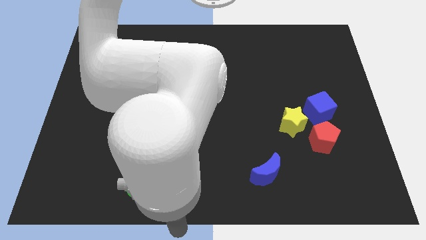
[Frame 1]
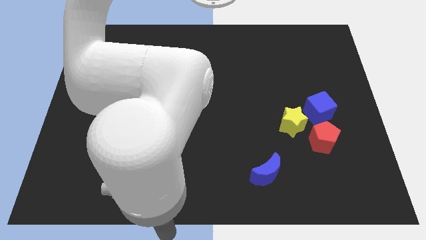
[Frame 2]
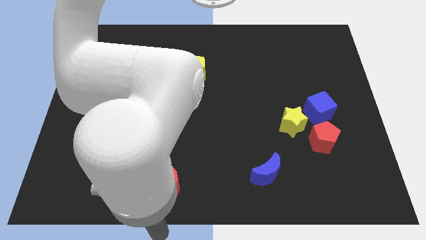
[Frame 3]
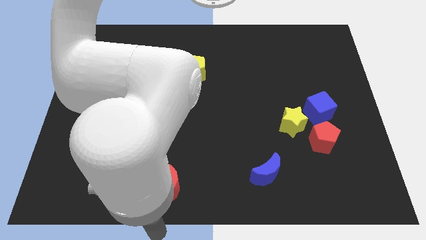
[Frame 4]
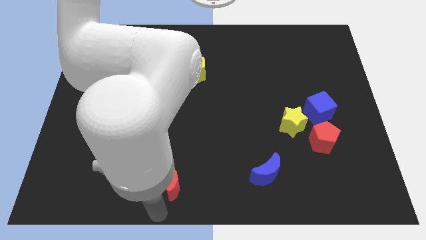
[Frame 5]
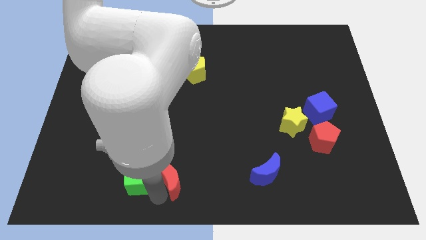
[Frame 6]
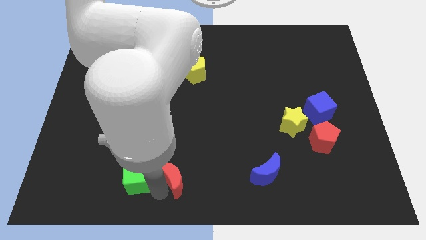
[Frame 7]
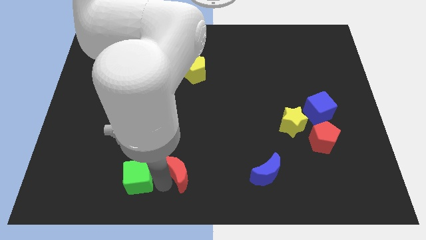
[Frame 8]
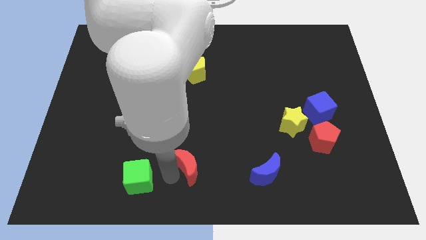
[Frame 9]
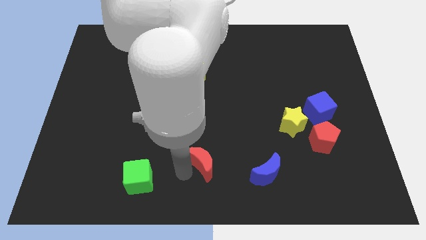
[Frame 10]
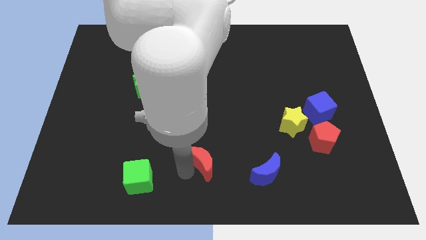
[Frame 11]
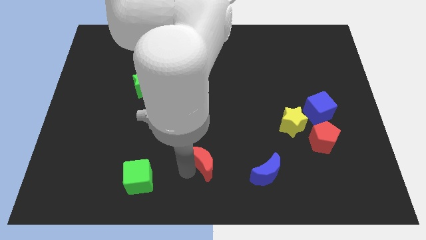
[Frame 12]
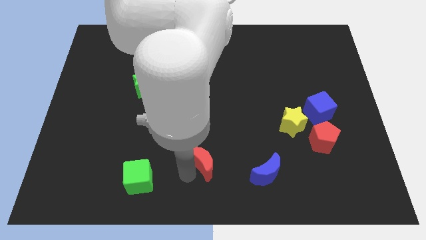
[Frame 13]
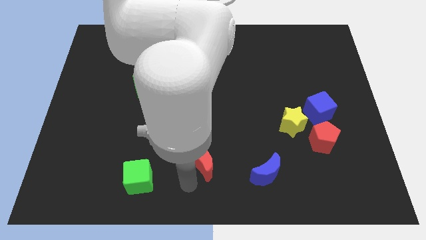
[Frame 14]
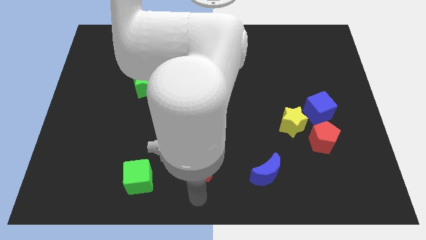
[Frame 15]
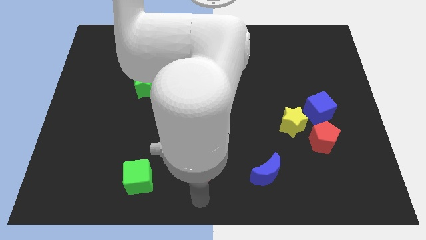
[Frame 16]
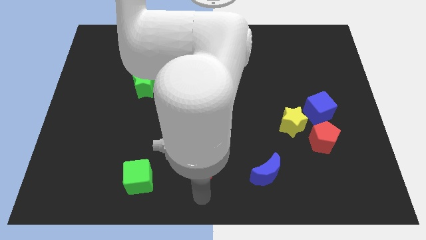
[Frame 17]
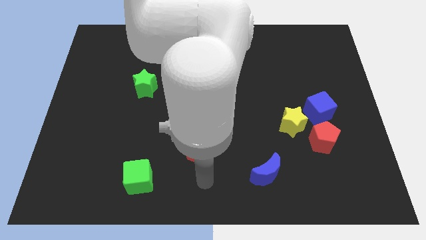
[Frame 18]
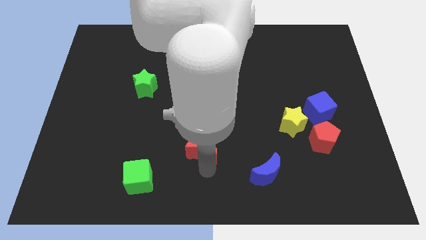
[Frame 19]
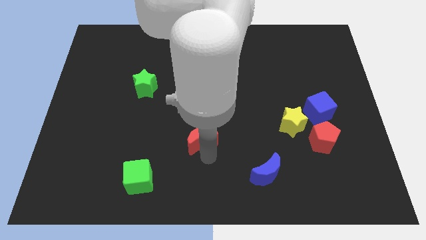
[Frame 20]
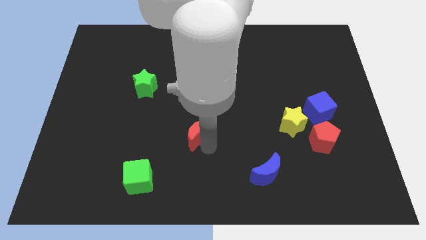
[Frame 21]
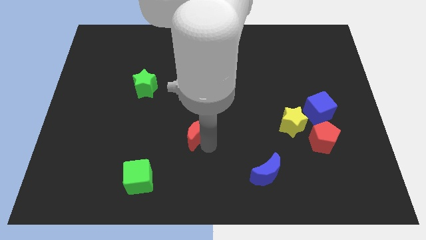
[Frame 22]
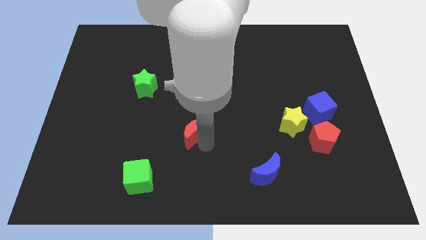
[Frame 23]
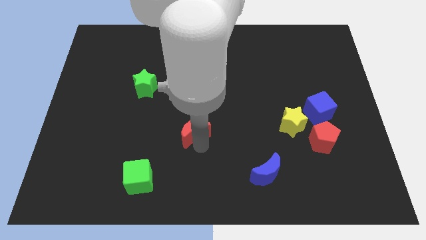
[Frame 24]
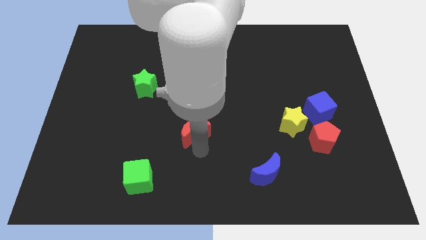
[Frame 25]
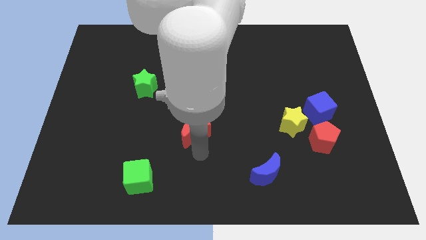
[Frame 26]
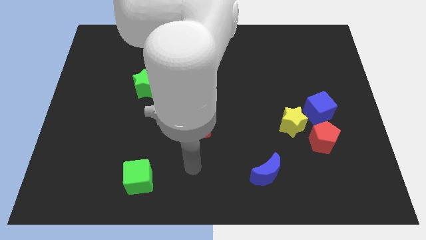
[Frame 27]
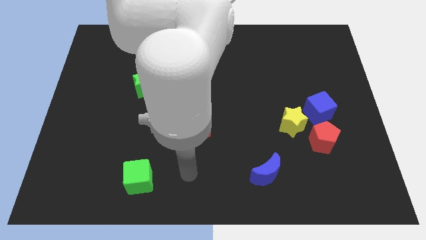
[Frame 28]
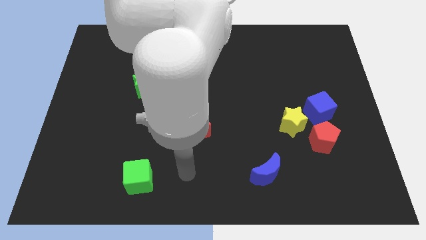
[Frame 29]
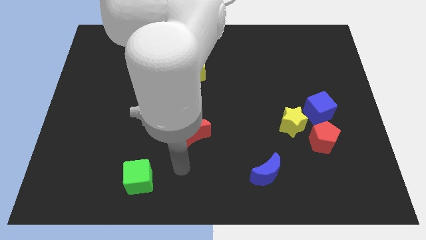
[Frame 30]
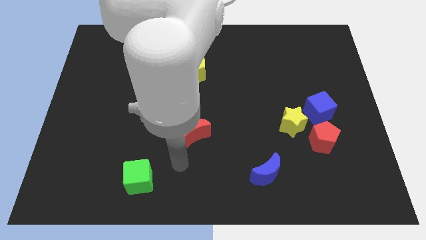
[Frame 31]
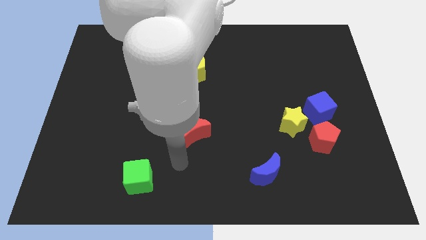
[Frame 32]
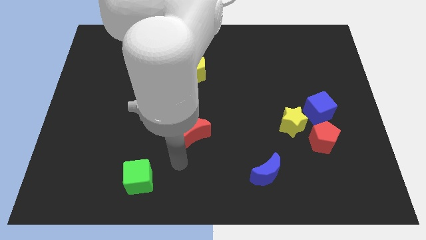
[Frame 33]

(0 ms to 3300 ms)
place red moon to the bottom of the yellow pentagon

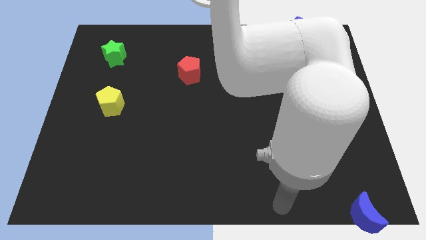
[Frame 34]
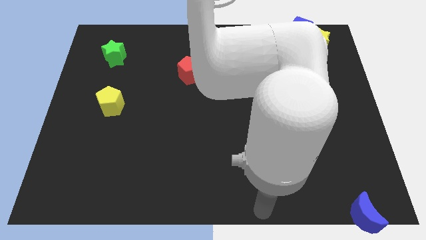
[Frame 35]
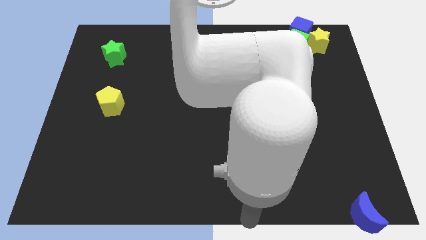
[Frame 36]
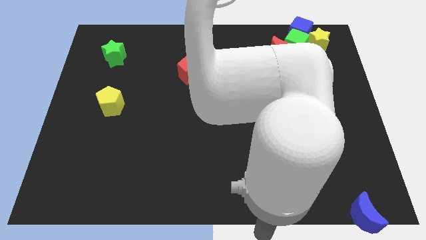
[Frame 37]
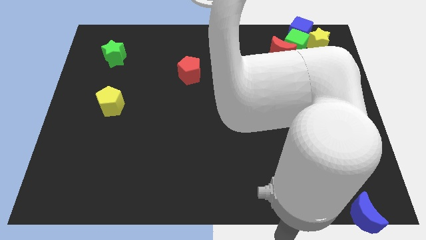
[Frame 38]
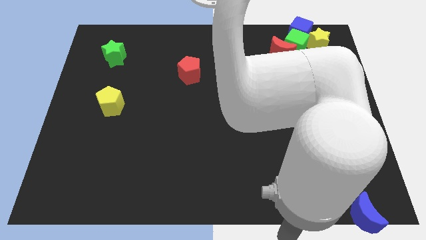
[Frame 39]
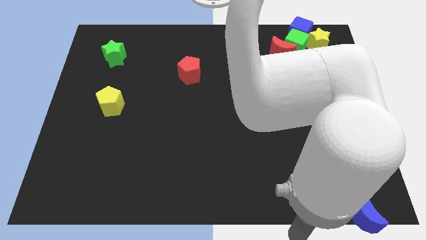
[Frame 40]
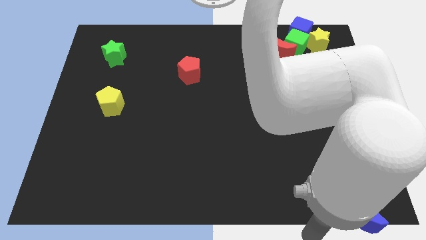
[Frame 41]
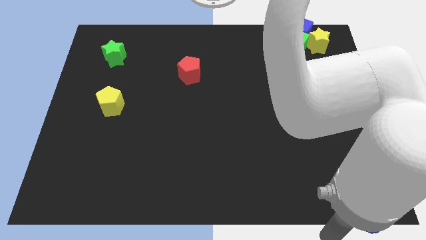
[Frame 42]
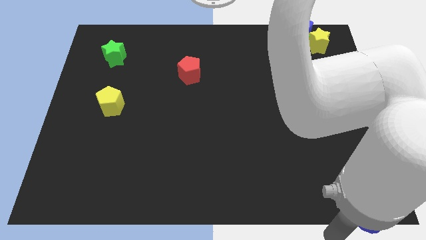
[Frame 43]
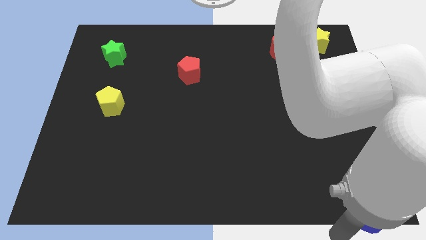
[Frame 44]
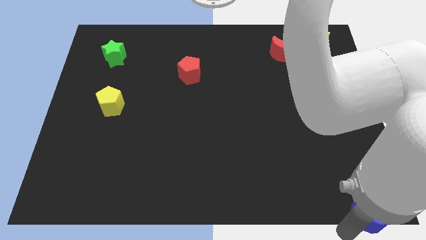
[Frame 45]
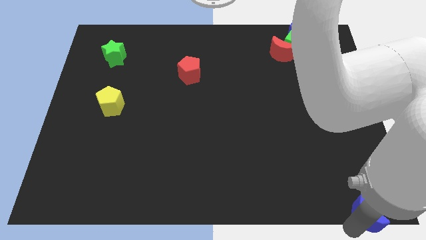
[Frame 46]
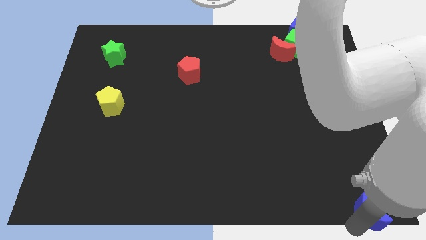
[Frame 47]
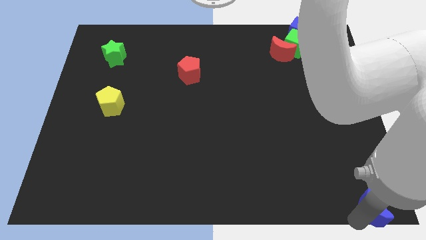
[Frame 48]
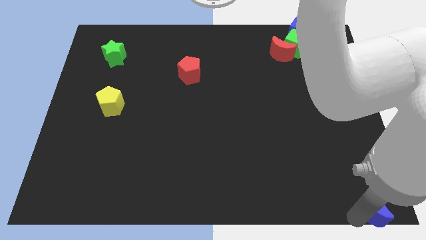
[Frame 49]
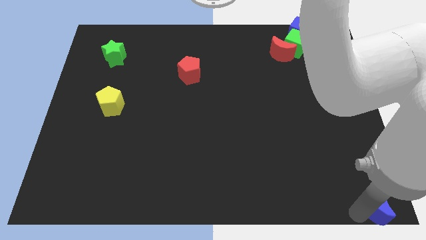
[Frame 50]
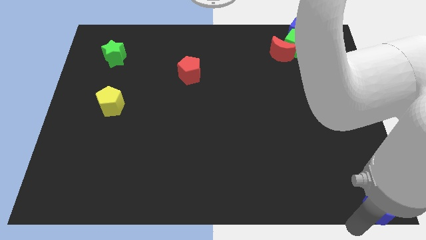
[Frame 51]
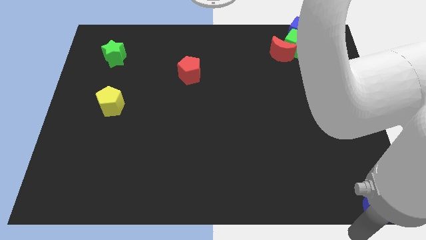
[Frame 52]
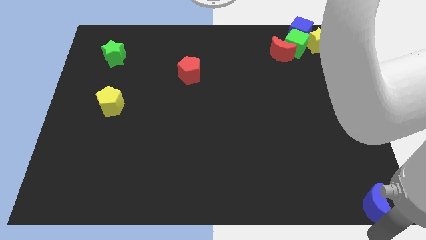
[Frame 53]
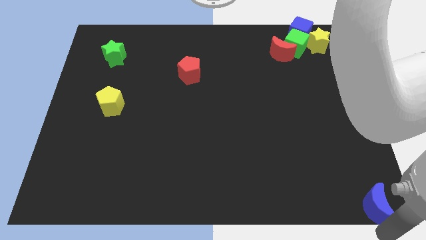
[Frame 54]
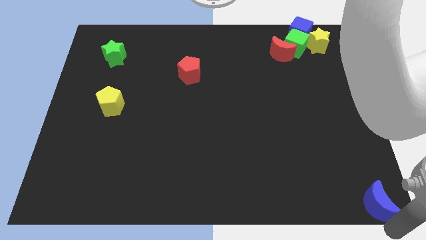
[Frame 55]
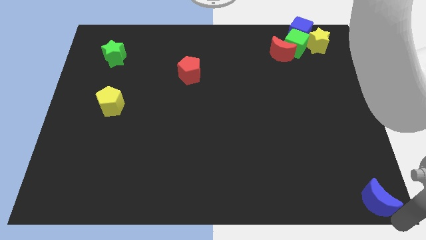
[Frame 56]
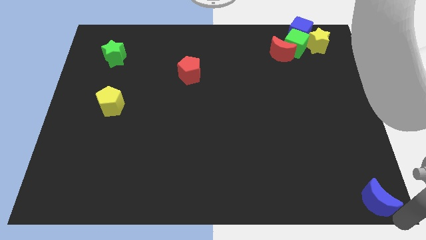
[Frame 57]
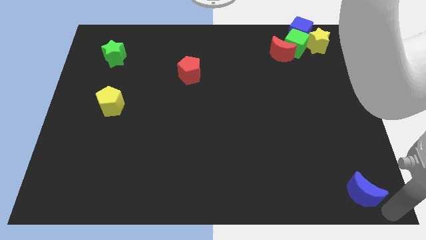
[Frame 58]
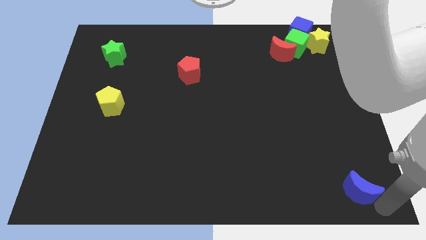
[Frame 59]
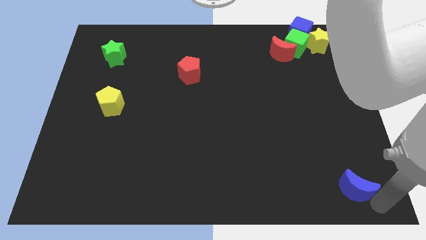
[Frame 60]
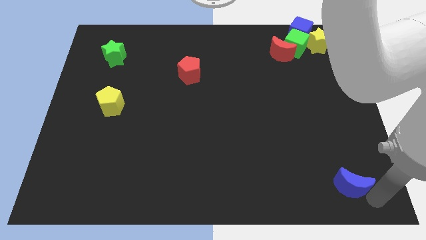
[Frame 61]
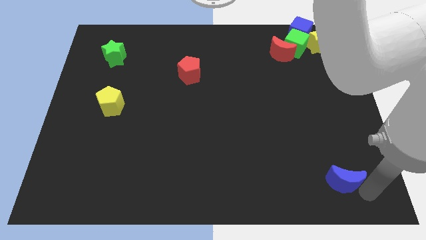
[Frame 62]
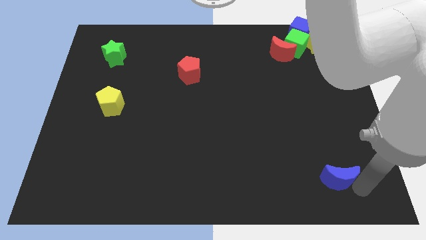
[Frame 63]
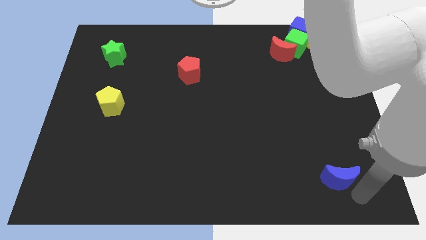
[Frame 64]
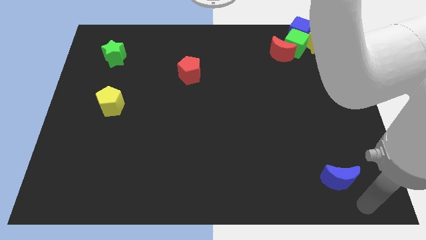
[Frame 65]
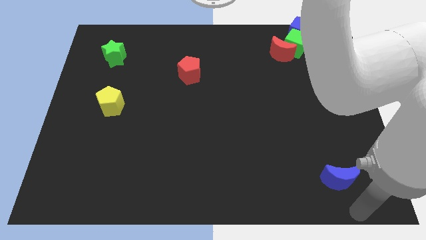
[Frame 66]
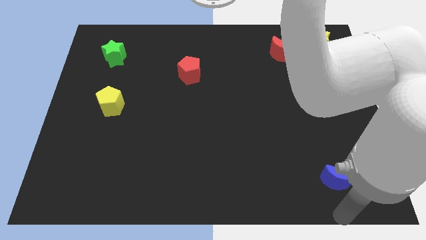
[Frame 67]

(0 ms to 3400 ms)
move blue moon towards up

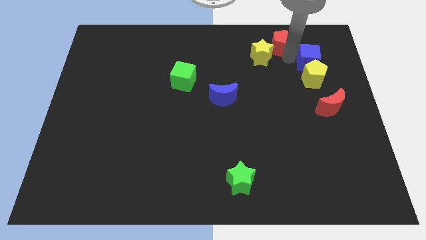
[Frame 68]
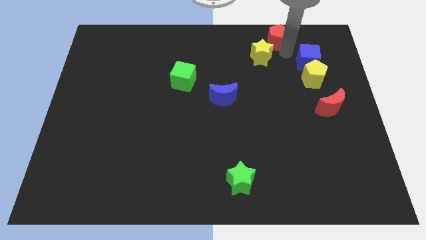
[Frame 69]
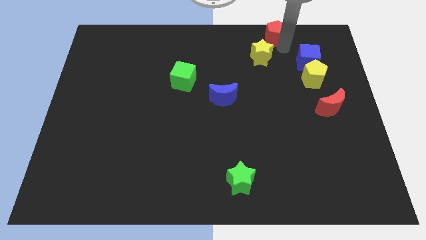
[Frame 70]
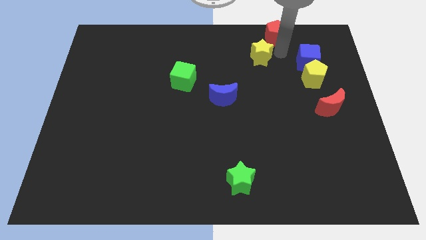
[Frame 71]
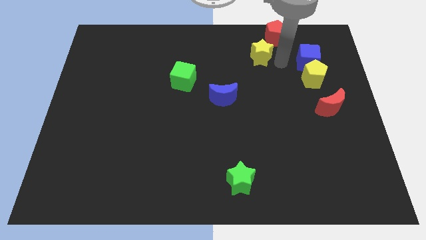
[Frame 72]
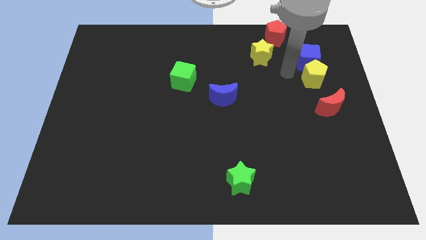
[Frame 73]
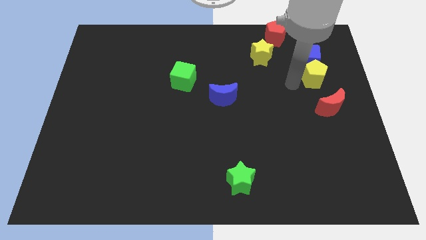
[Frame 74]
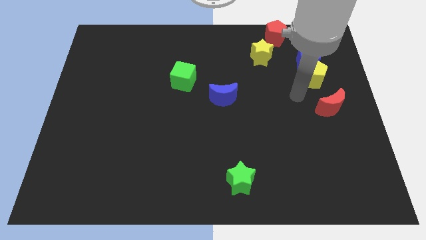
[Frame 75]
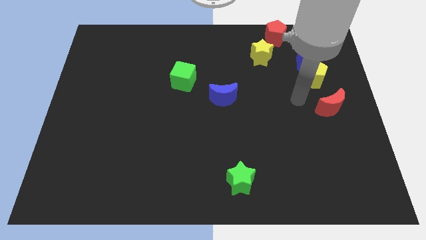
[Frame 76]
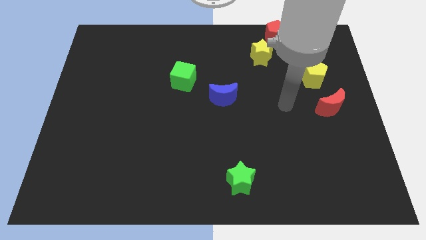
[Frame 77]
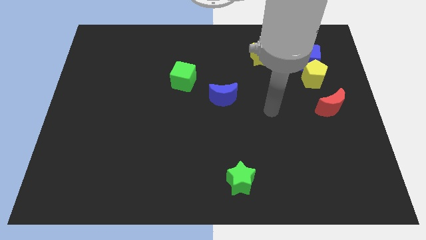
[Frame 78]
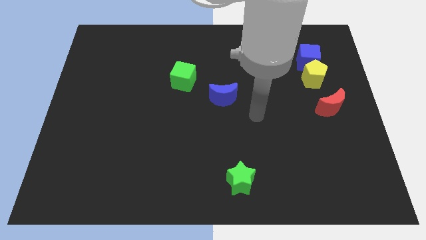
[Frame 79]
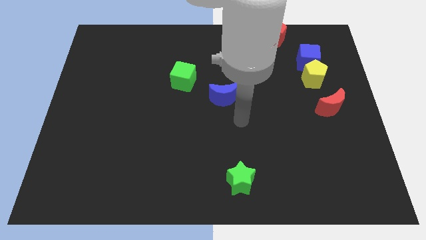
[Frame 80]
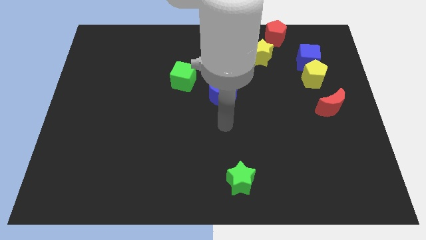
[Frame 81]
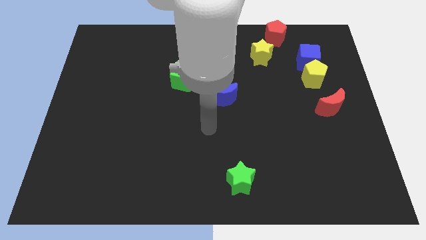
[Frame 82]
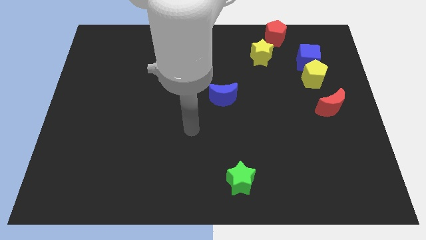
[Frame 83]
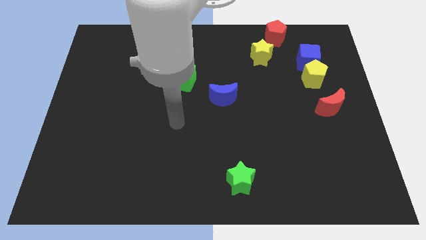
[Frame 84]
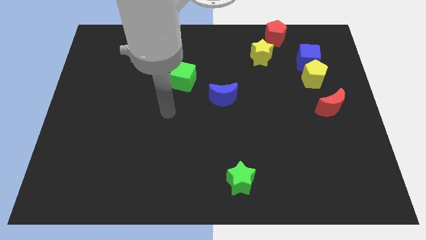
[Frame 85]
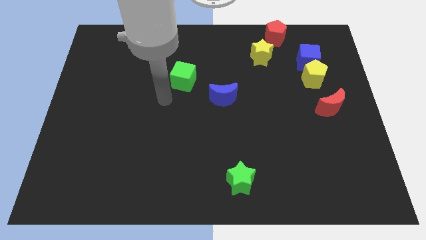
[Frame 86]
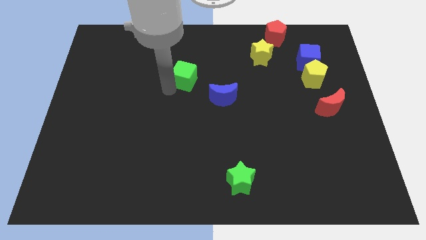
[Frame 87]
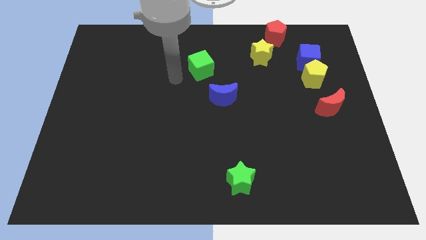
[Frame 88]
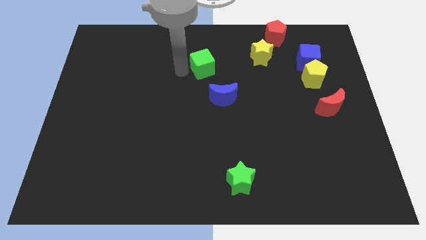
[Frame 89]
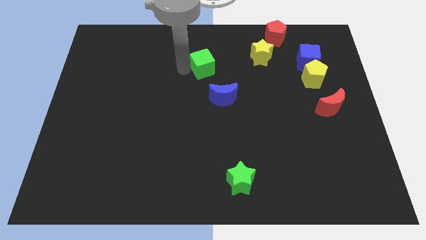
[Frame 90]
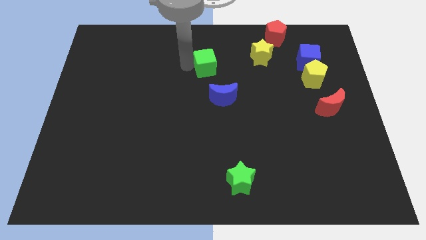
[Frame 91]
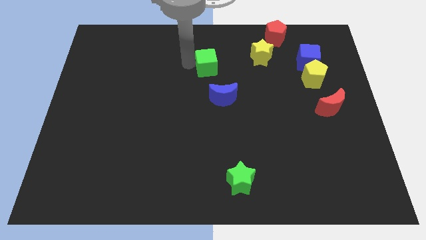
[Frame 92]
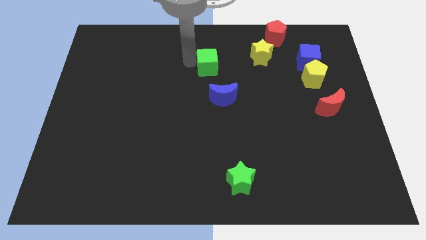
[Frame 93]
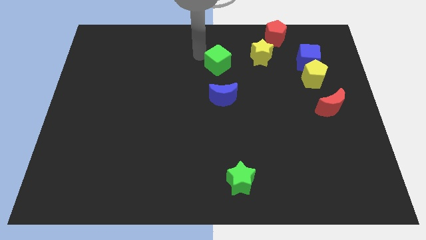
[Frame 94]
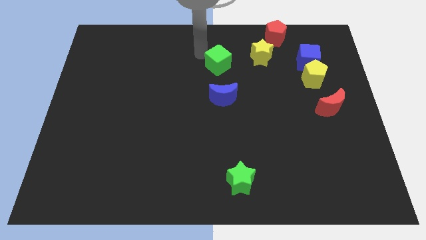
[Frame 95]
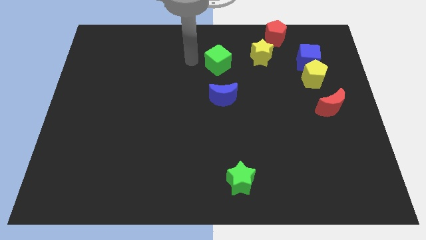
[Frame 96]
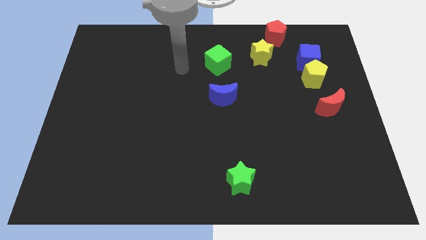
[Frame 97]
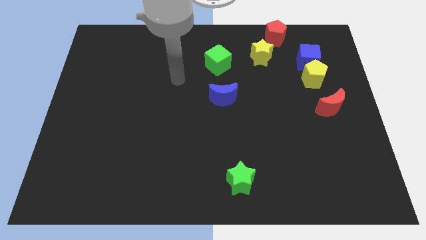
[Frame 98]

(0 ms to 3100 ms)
place green cube above blue moon
